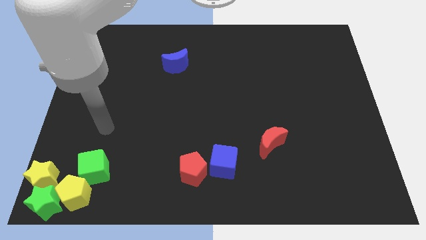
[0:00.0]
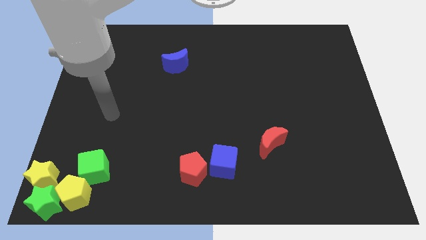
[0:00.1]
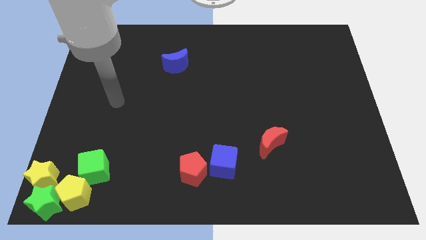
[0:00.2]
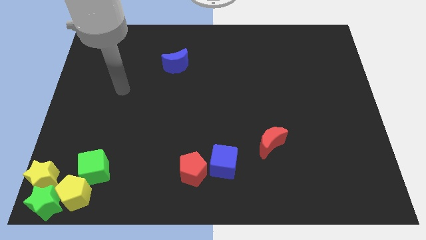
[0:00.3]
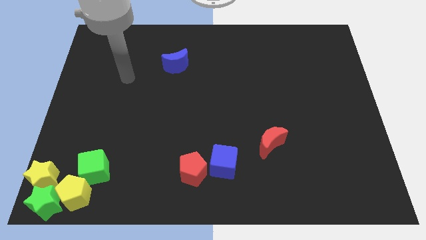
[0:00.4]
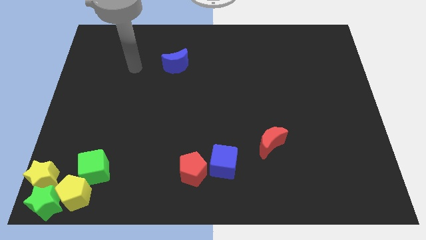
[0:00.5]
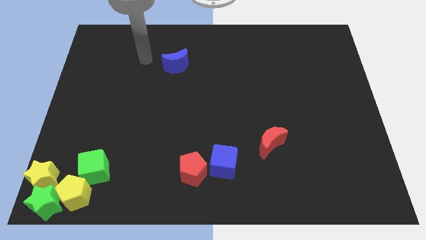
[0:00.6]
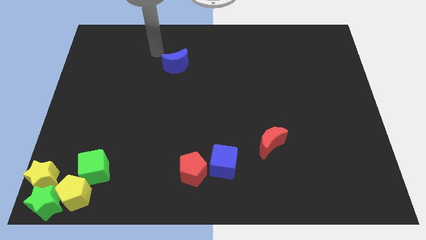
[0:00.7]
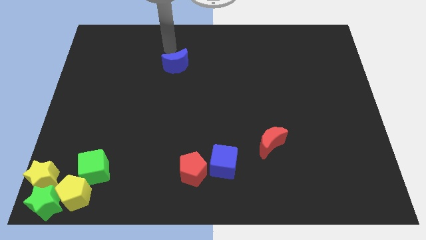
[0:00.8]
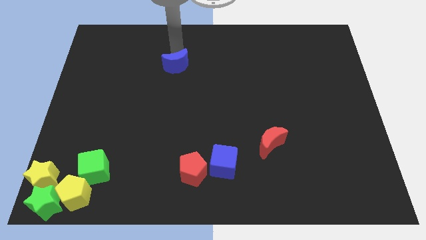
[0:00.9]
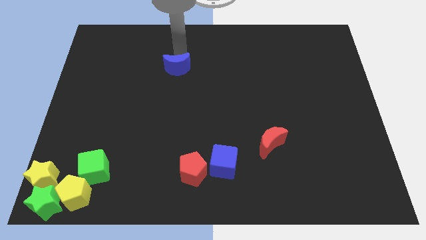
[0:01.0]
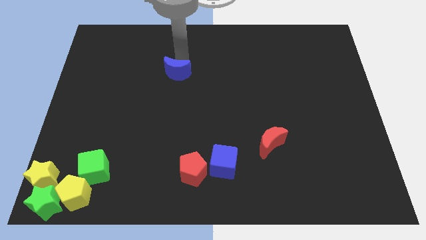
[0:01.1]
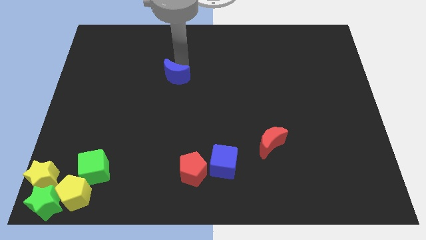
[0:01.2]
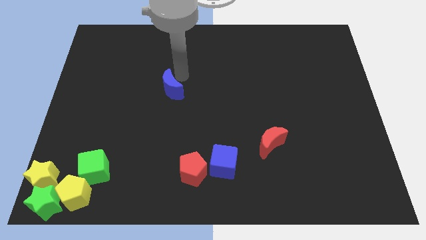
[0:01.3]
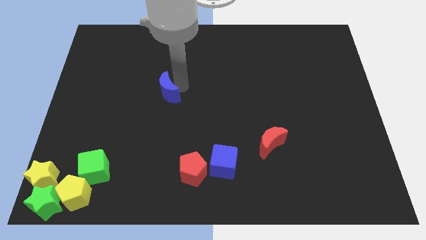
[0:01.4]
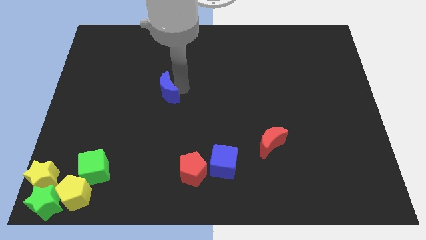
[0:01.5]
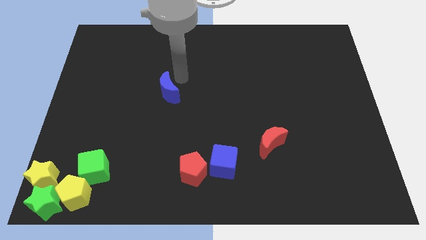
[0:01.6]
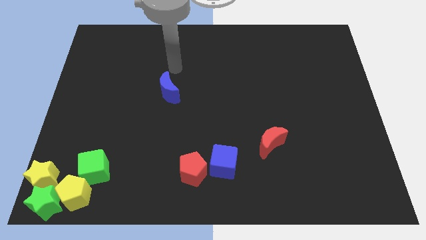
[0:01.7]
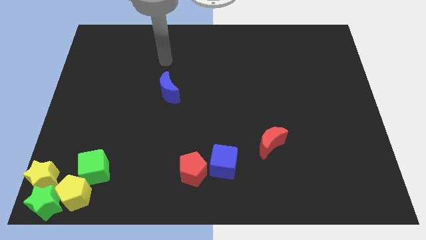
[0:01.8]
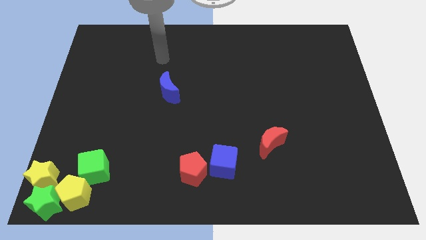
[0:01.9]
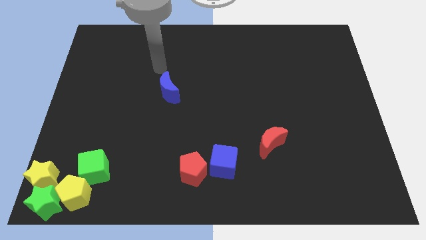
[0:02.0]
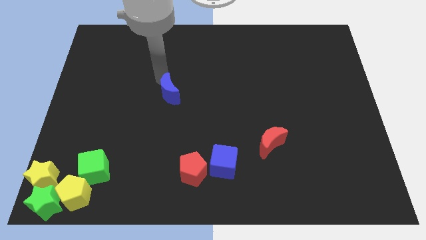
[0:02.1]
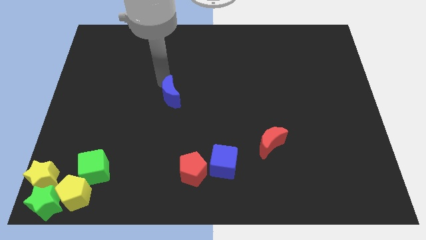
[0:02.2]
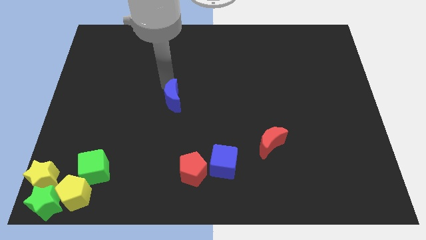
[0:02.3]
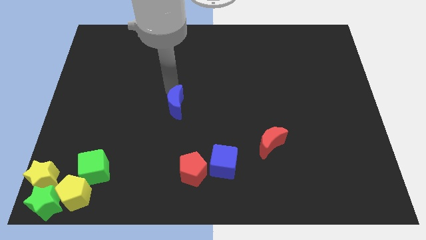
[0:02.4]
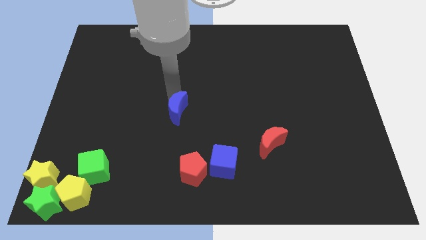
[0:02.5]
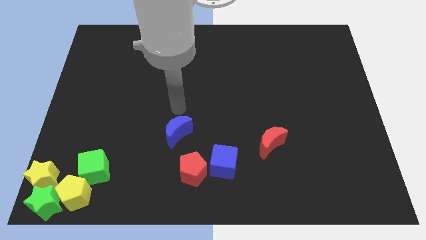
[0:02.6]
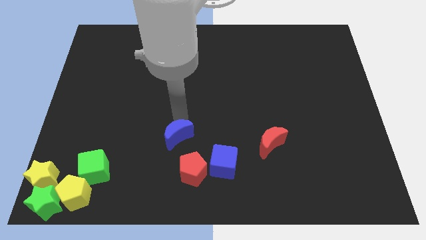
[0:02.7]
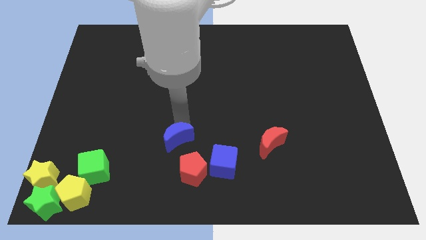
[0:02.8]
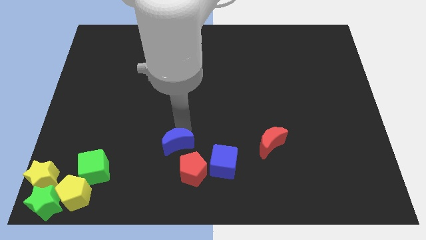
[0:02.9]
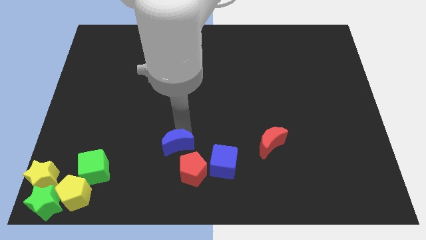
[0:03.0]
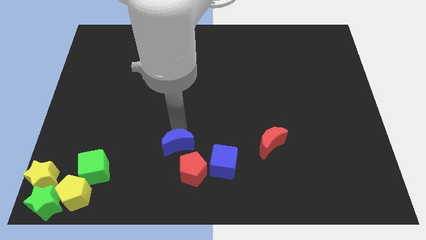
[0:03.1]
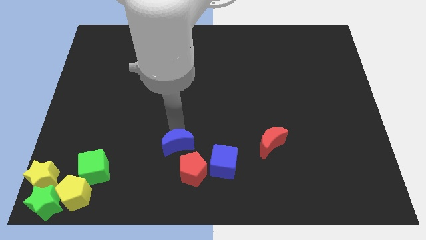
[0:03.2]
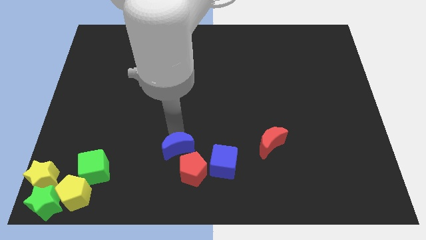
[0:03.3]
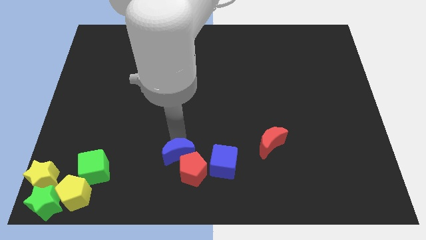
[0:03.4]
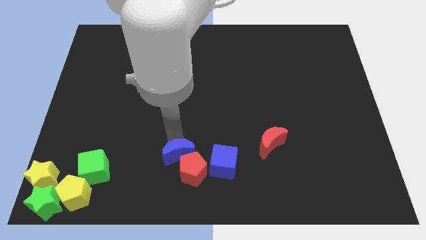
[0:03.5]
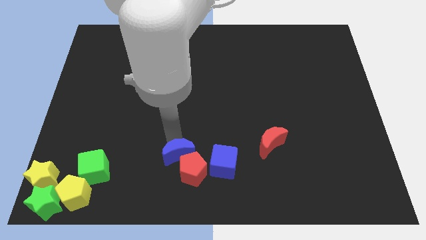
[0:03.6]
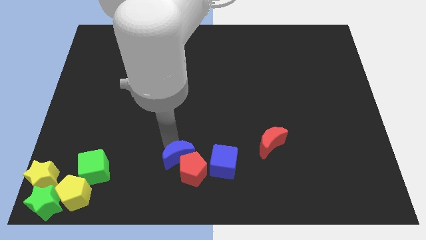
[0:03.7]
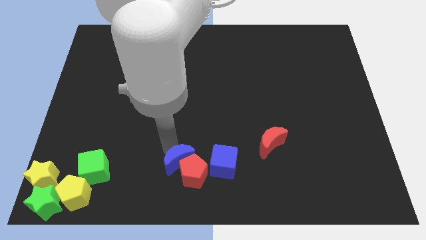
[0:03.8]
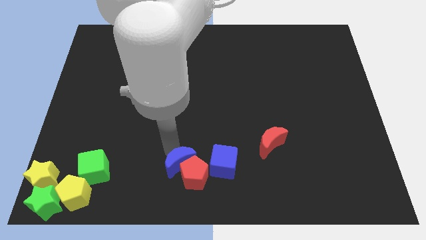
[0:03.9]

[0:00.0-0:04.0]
place blue moon into the red pentagon

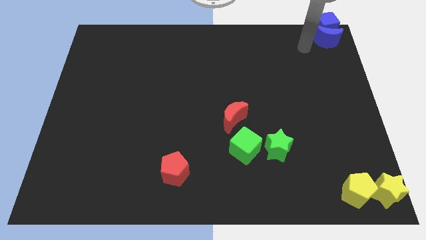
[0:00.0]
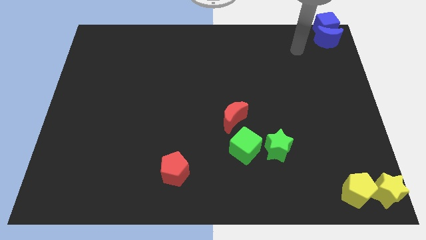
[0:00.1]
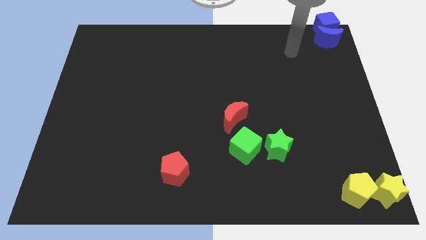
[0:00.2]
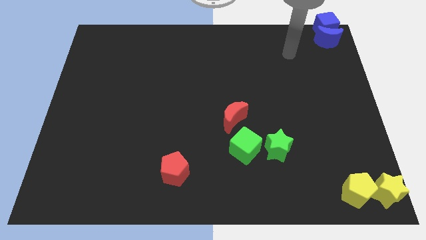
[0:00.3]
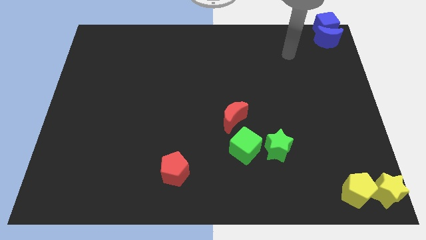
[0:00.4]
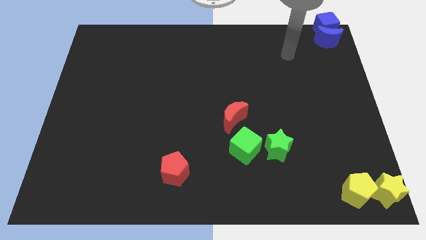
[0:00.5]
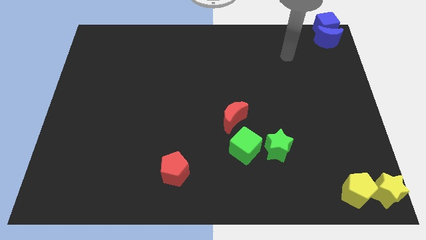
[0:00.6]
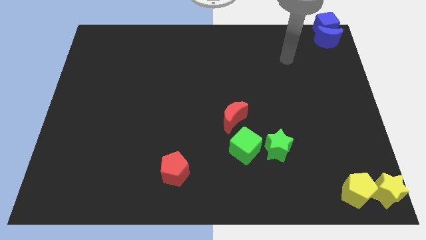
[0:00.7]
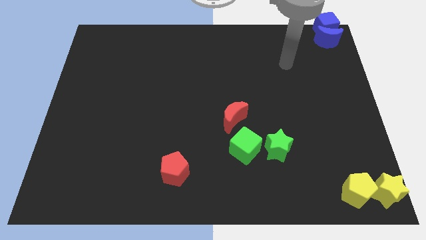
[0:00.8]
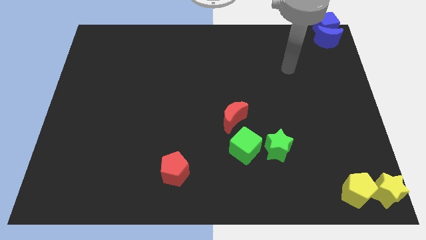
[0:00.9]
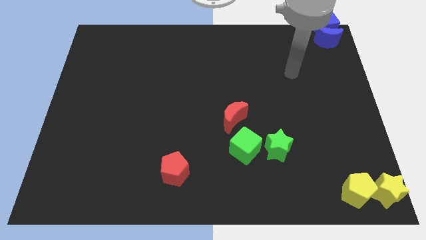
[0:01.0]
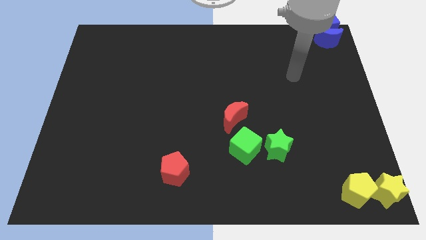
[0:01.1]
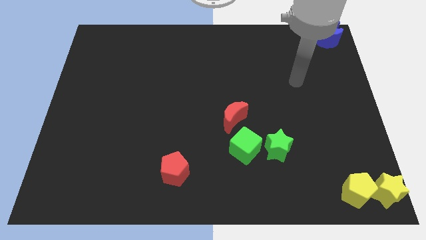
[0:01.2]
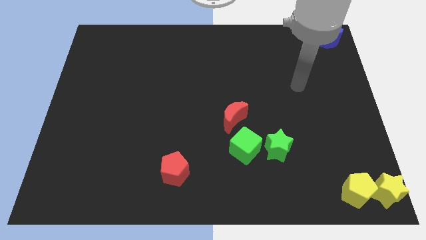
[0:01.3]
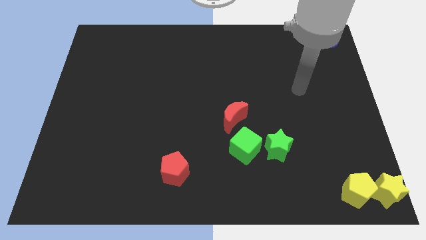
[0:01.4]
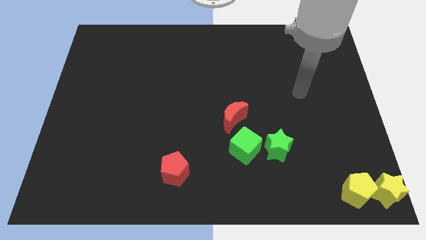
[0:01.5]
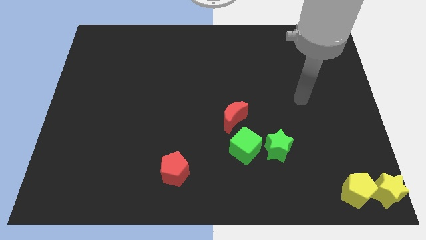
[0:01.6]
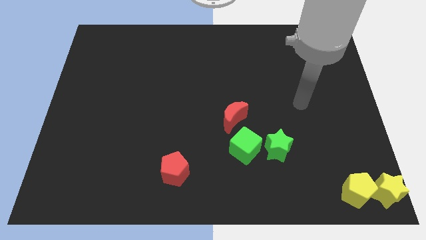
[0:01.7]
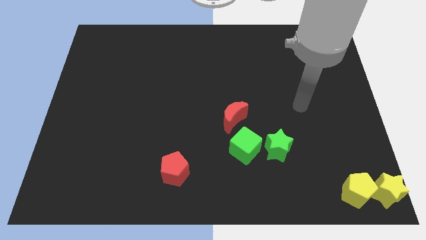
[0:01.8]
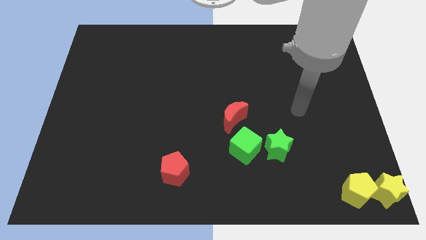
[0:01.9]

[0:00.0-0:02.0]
move the arm away from the blue cube

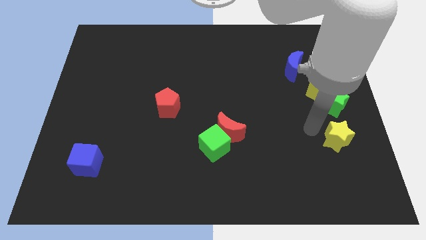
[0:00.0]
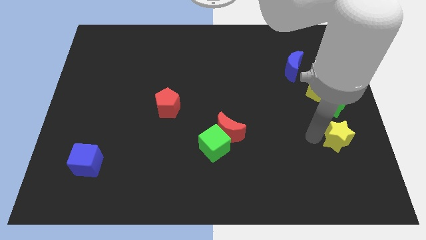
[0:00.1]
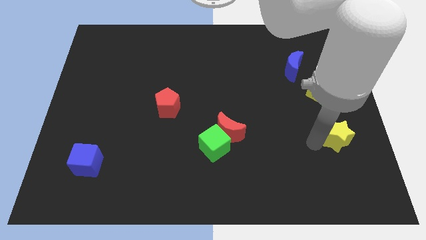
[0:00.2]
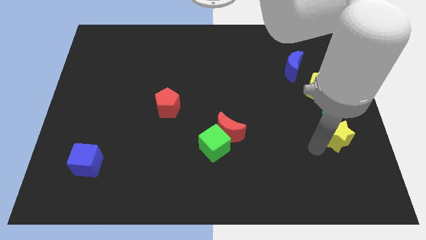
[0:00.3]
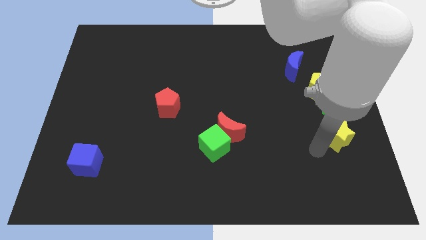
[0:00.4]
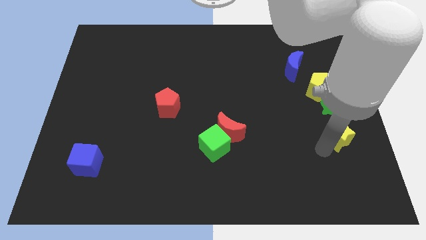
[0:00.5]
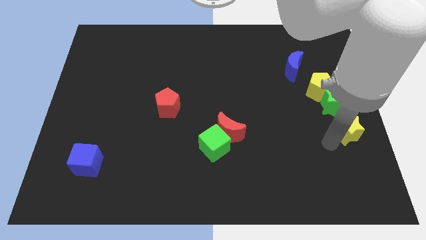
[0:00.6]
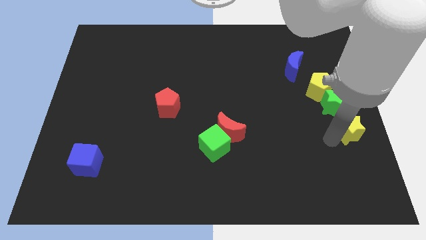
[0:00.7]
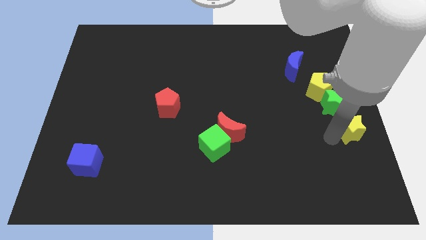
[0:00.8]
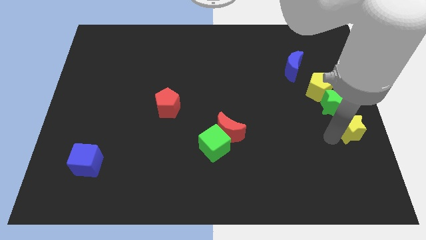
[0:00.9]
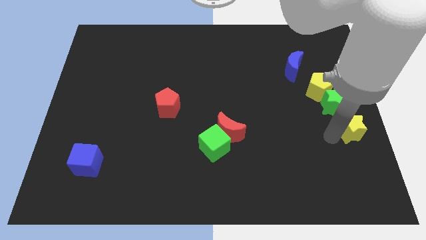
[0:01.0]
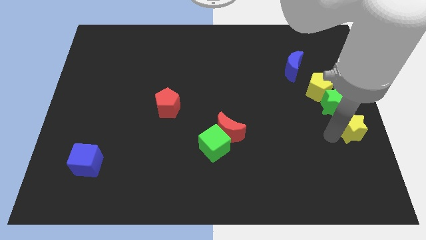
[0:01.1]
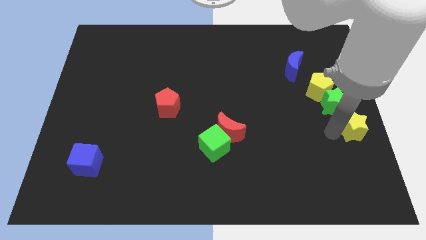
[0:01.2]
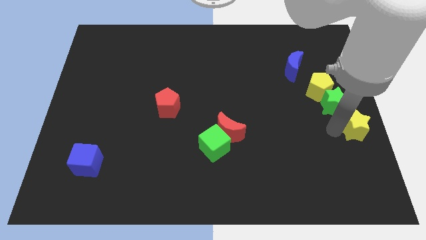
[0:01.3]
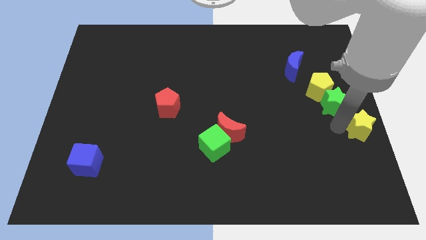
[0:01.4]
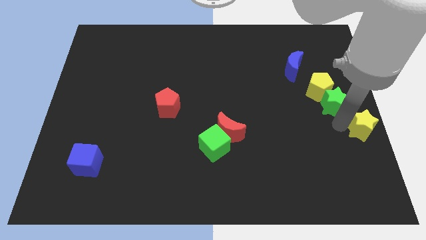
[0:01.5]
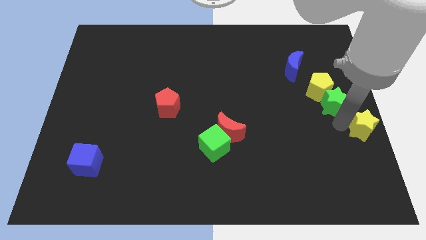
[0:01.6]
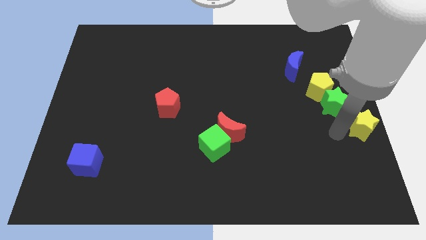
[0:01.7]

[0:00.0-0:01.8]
move the yellow star diagonally bottom right to the green star

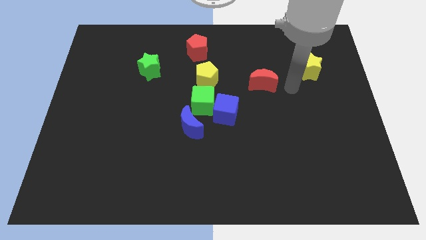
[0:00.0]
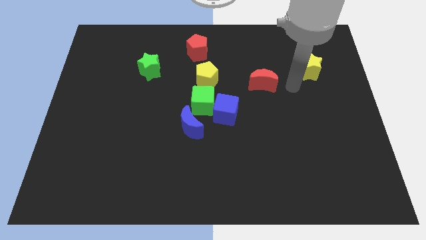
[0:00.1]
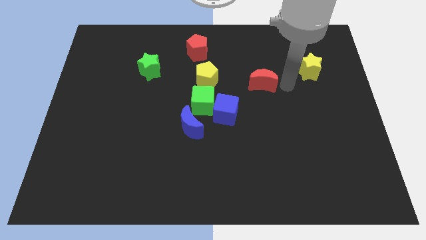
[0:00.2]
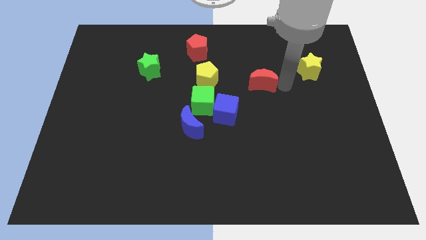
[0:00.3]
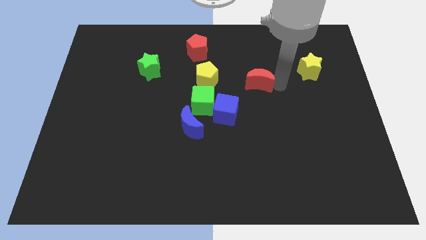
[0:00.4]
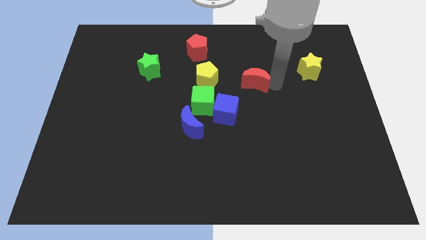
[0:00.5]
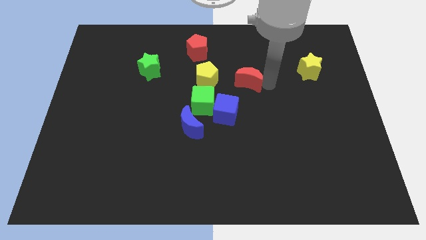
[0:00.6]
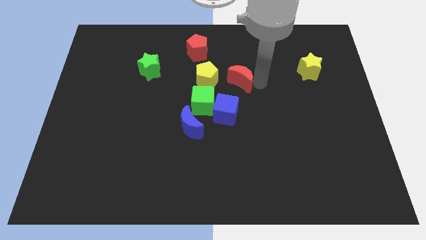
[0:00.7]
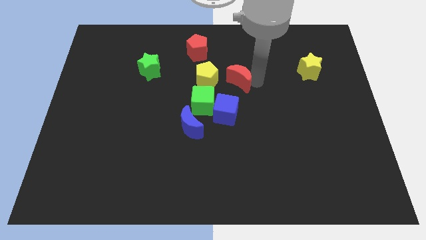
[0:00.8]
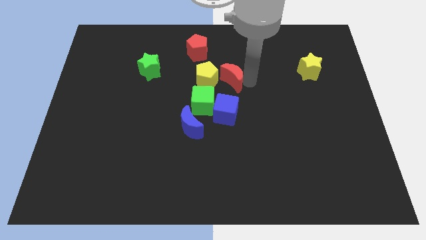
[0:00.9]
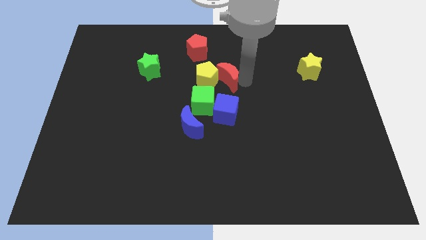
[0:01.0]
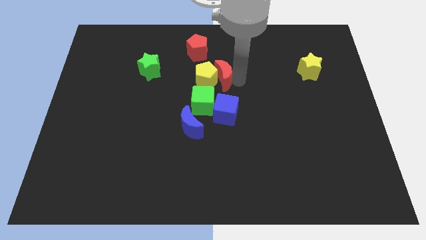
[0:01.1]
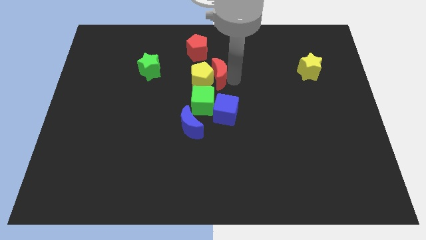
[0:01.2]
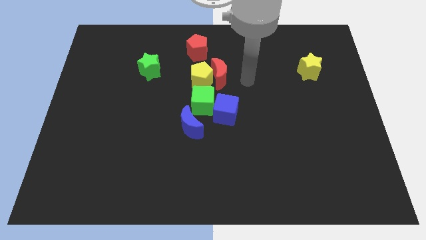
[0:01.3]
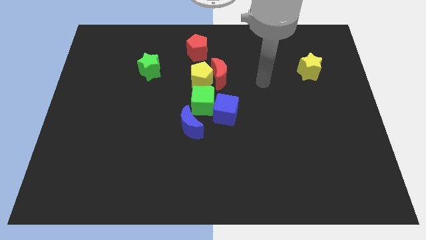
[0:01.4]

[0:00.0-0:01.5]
move red moon into the yellow pentagon
